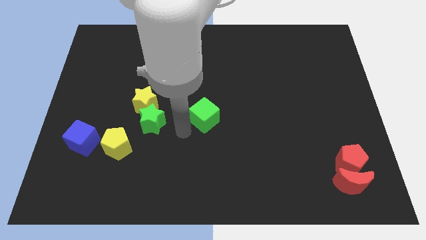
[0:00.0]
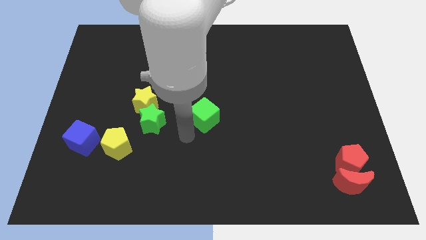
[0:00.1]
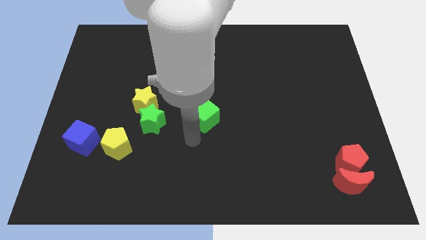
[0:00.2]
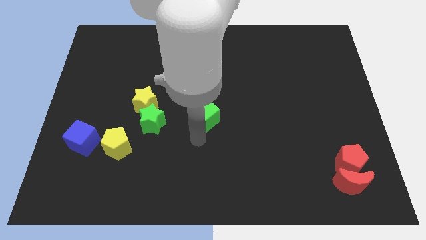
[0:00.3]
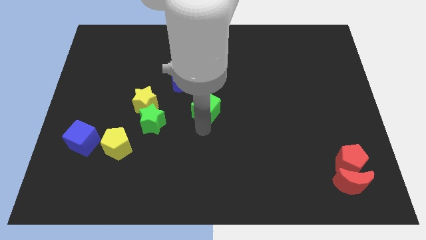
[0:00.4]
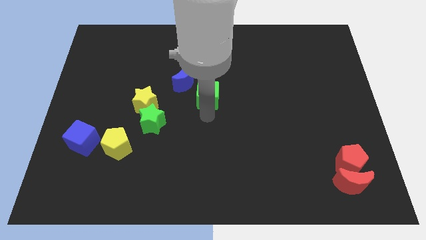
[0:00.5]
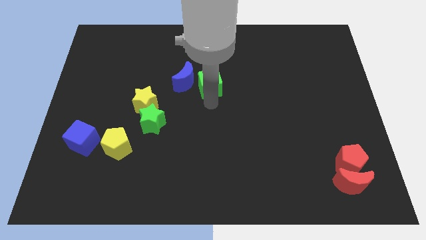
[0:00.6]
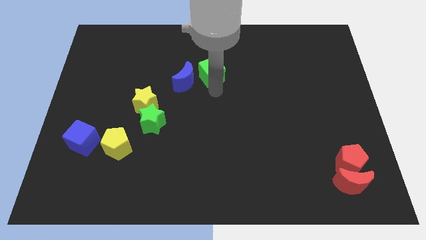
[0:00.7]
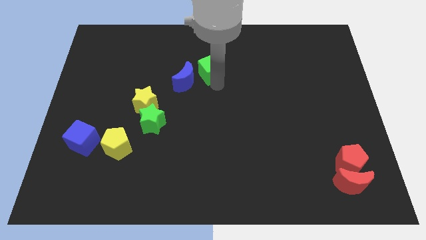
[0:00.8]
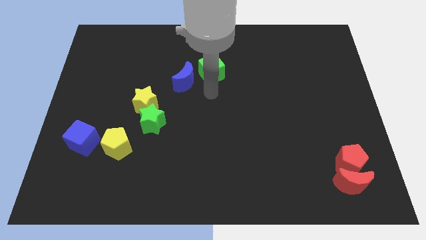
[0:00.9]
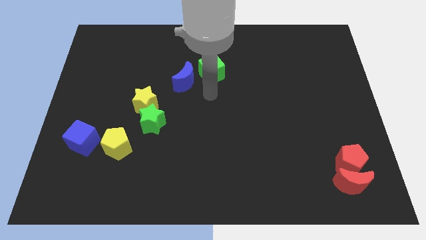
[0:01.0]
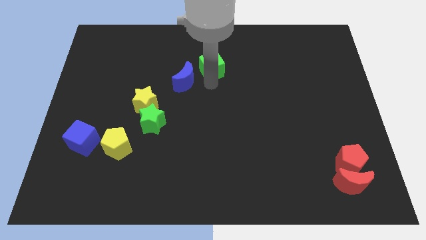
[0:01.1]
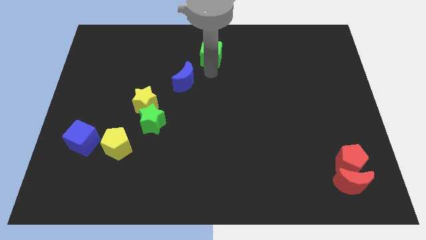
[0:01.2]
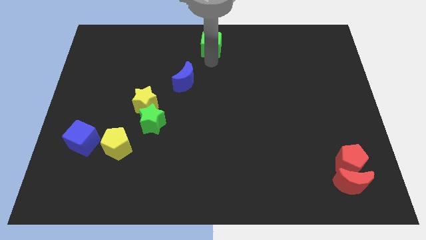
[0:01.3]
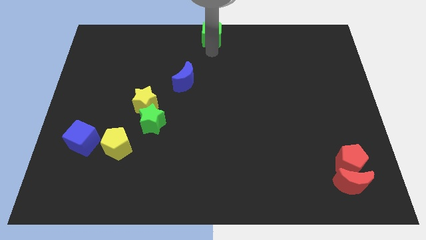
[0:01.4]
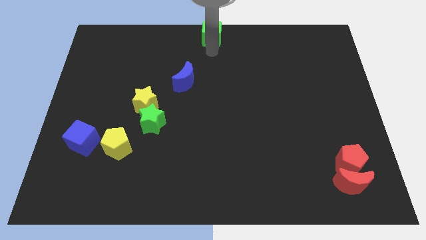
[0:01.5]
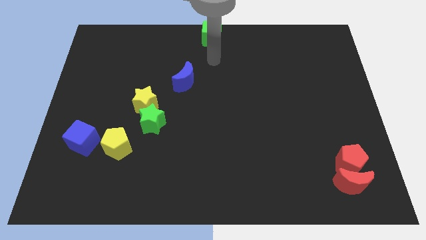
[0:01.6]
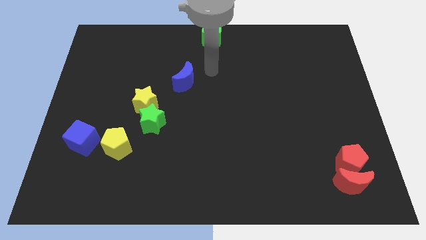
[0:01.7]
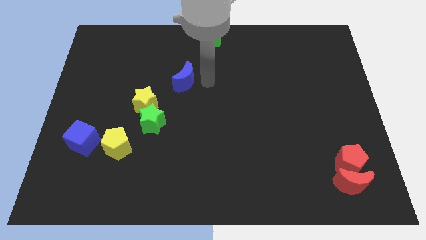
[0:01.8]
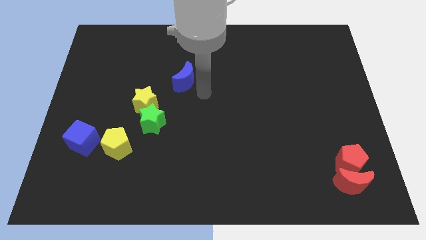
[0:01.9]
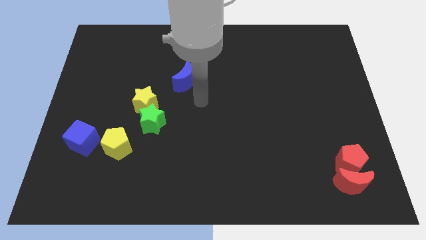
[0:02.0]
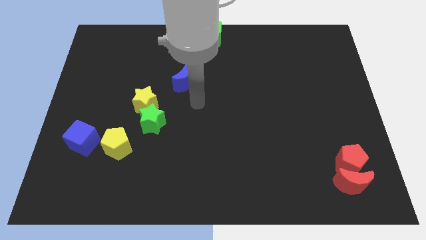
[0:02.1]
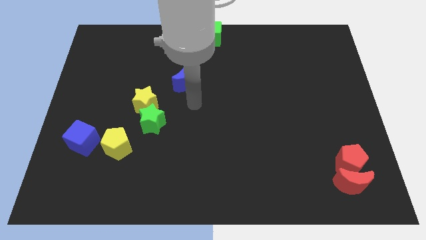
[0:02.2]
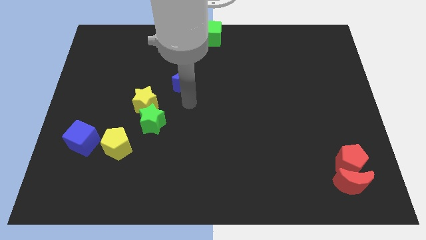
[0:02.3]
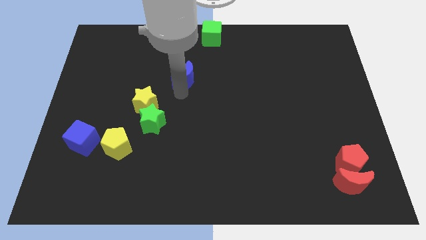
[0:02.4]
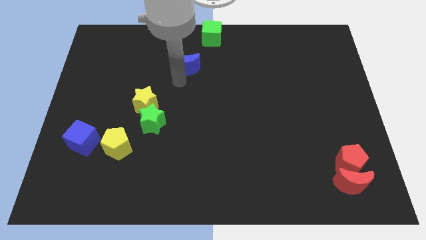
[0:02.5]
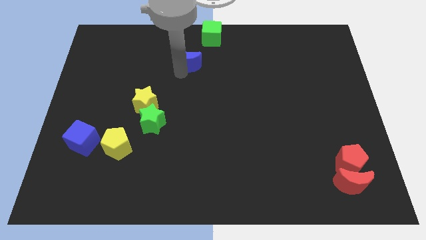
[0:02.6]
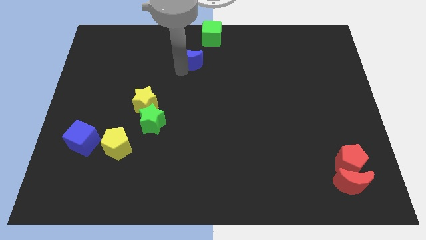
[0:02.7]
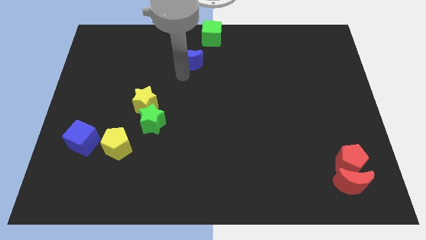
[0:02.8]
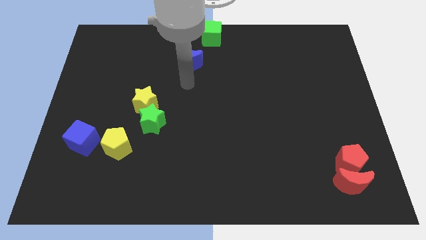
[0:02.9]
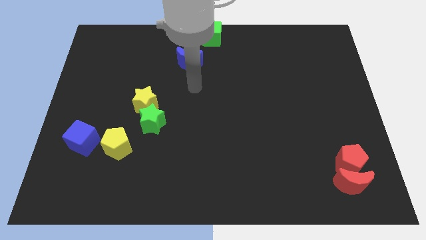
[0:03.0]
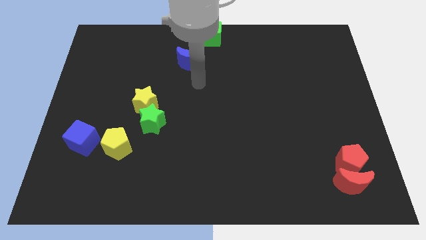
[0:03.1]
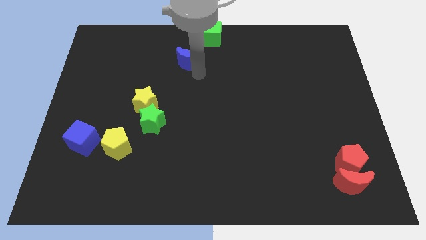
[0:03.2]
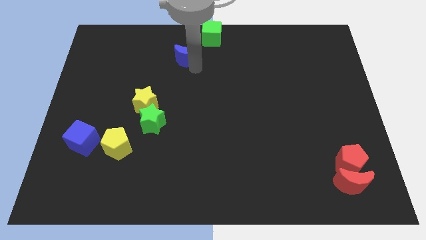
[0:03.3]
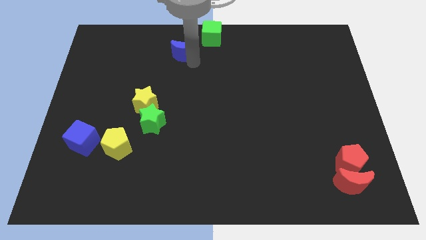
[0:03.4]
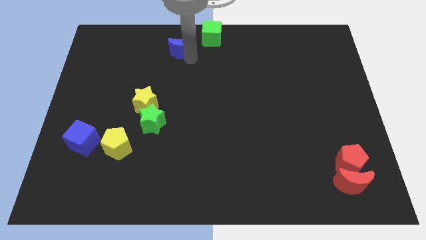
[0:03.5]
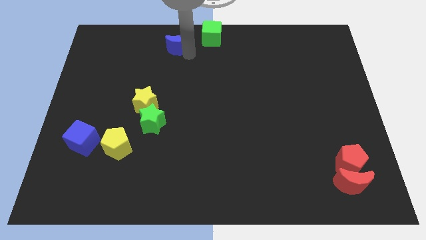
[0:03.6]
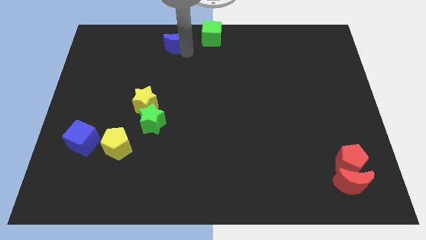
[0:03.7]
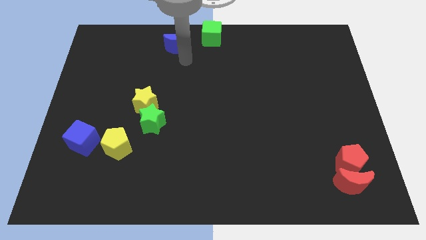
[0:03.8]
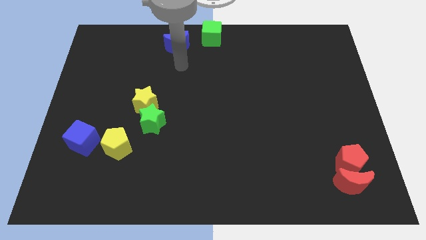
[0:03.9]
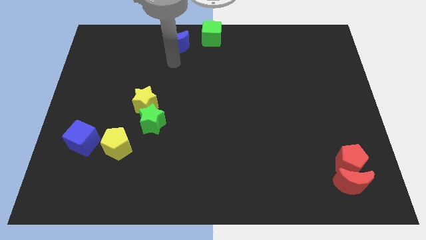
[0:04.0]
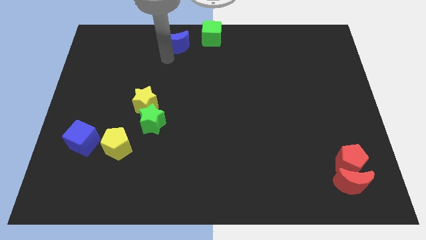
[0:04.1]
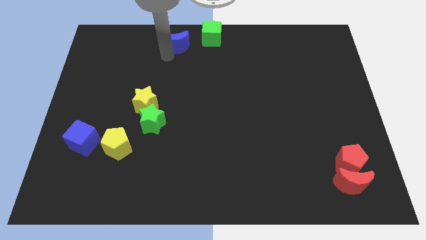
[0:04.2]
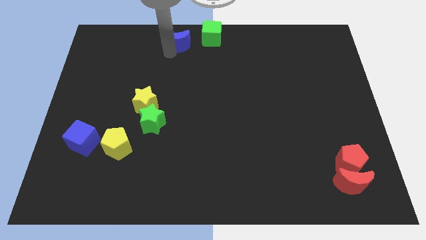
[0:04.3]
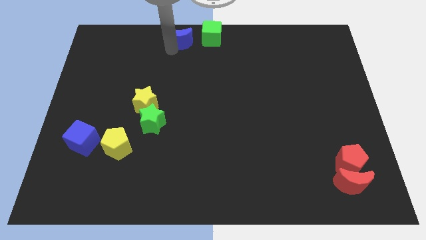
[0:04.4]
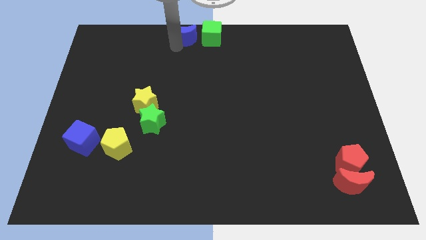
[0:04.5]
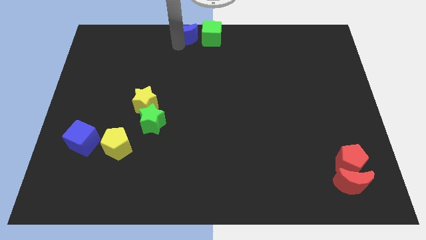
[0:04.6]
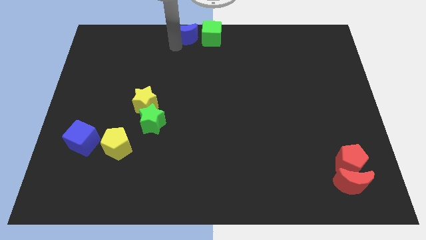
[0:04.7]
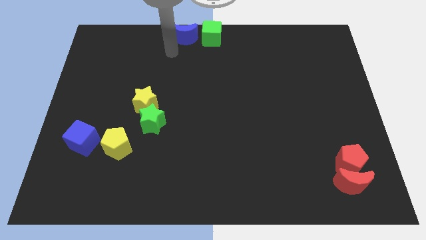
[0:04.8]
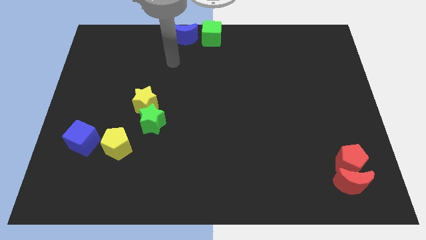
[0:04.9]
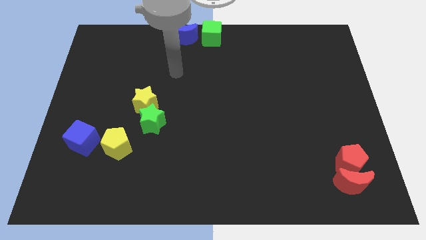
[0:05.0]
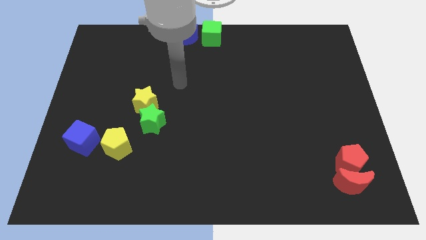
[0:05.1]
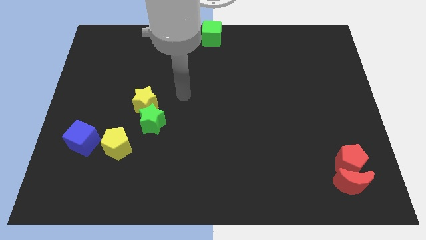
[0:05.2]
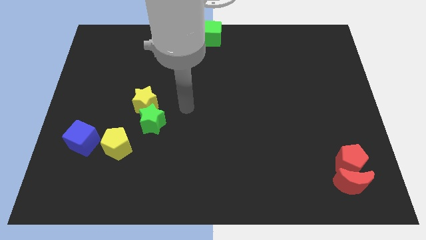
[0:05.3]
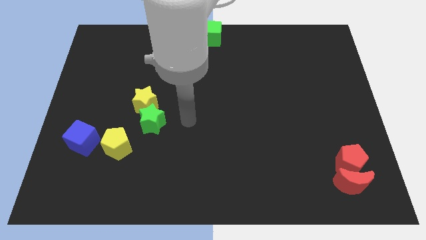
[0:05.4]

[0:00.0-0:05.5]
push the green cube and blue crescent to the top center of the board

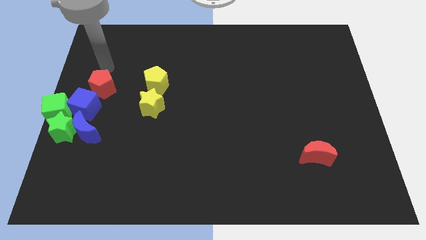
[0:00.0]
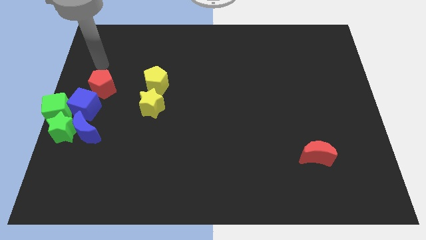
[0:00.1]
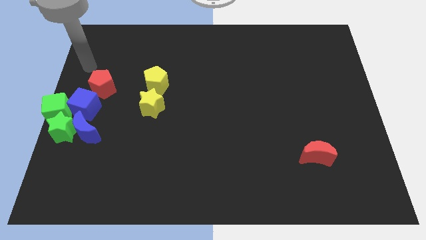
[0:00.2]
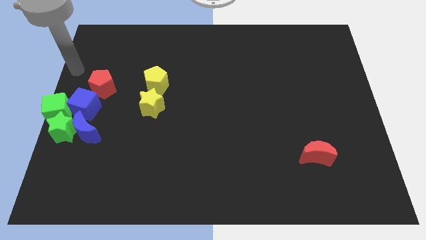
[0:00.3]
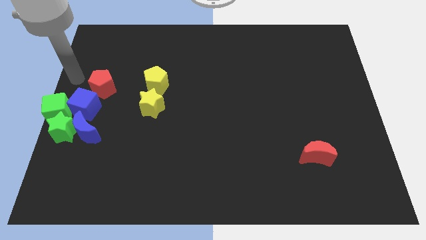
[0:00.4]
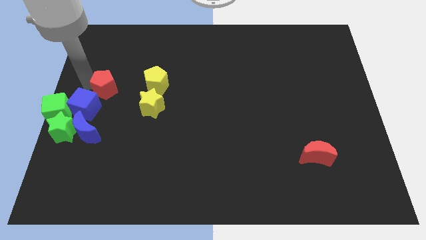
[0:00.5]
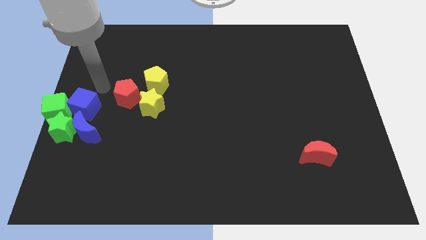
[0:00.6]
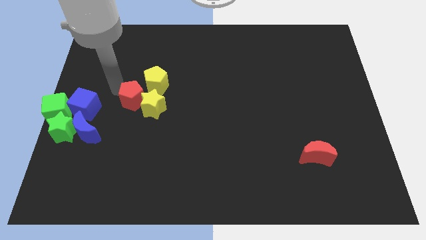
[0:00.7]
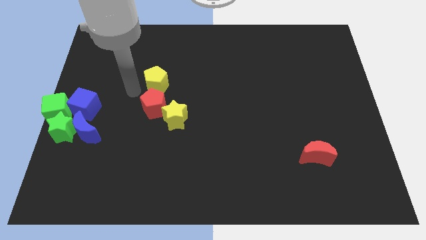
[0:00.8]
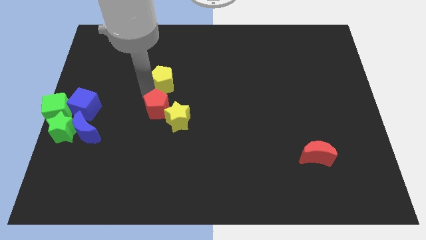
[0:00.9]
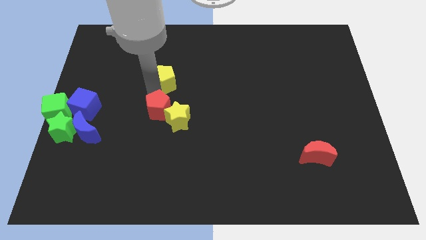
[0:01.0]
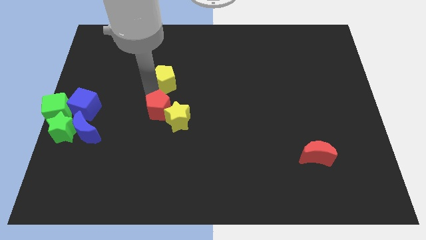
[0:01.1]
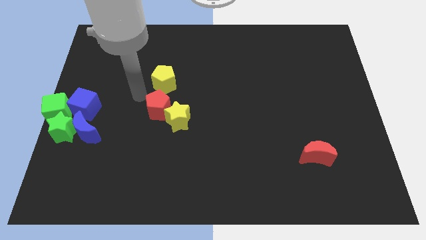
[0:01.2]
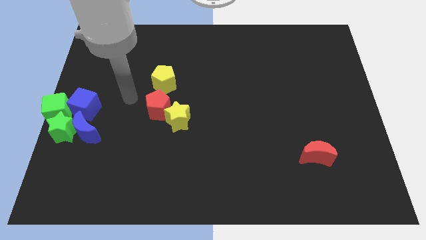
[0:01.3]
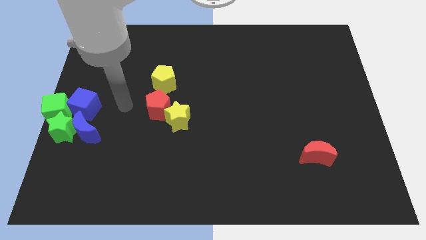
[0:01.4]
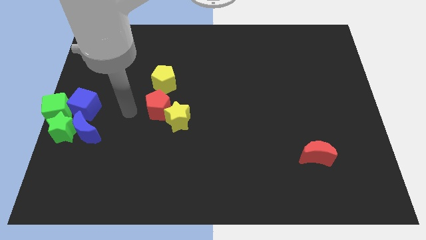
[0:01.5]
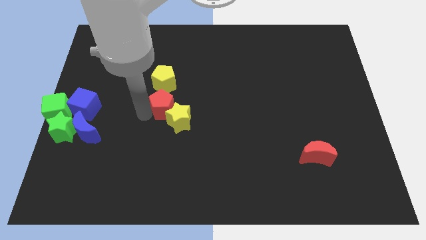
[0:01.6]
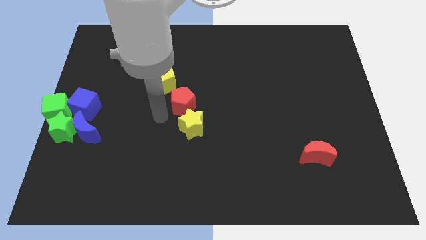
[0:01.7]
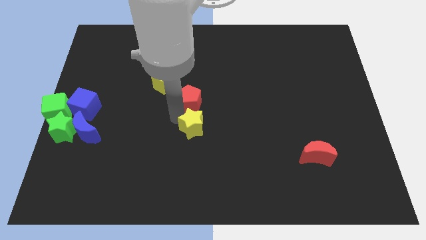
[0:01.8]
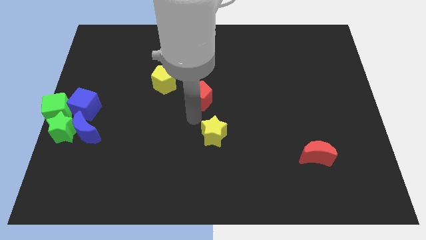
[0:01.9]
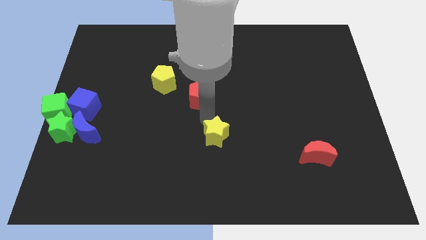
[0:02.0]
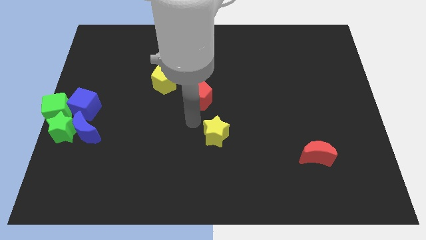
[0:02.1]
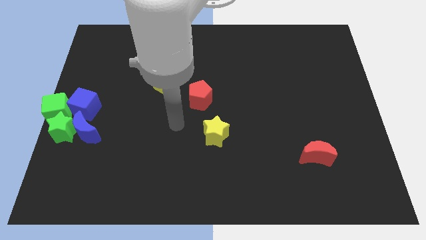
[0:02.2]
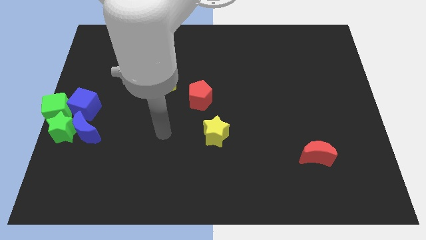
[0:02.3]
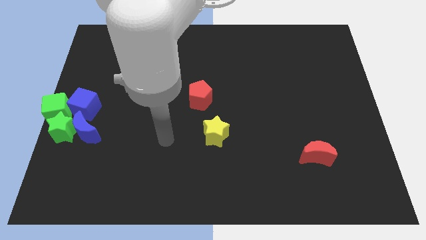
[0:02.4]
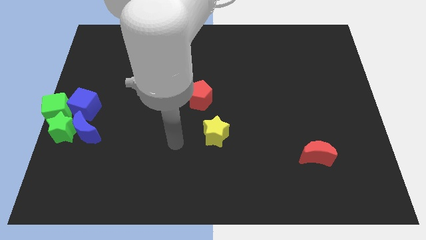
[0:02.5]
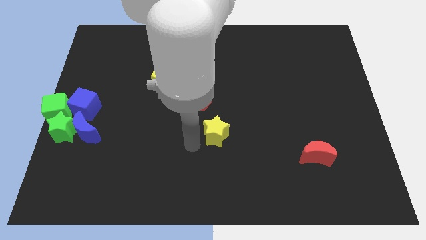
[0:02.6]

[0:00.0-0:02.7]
push the red moon towards the center of the board

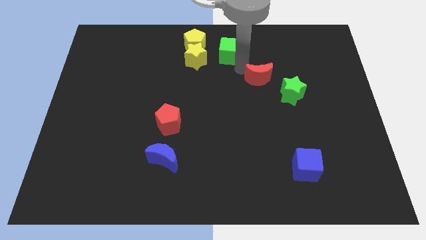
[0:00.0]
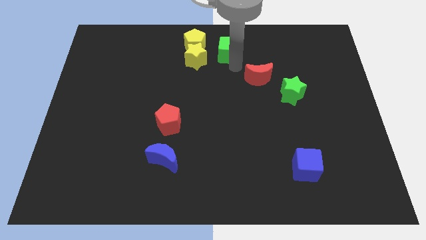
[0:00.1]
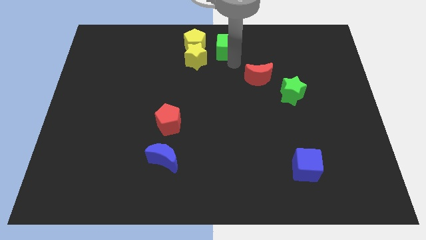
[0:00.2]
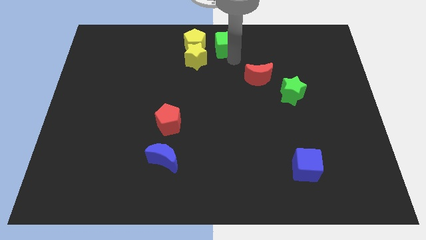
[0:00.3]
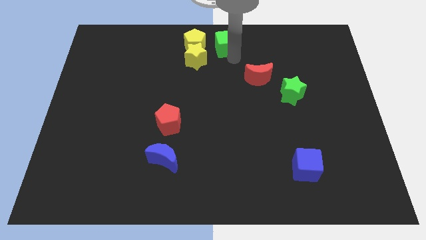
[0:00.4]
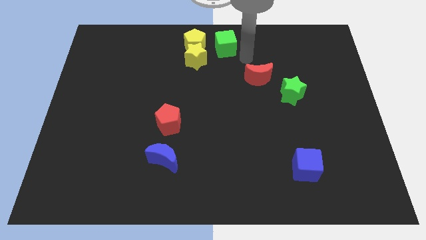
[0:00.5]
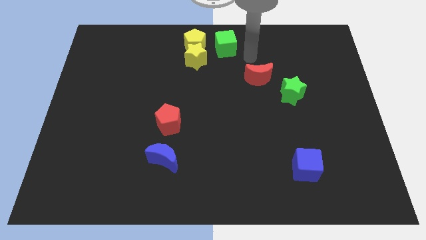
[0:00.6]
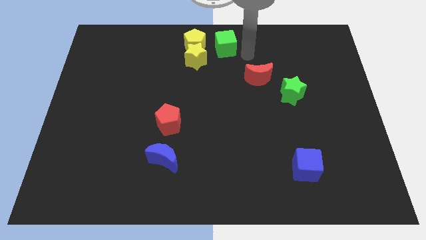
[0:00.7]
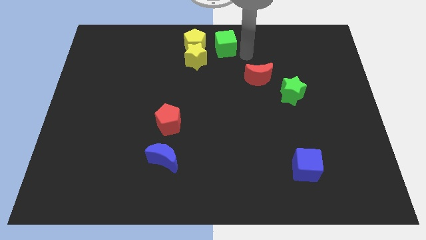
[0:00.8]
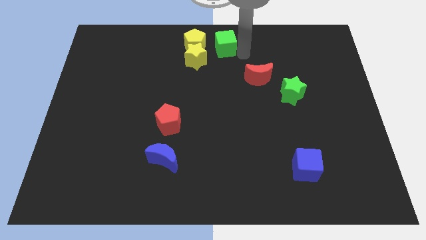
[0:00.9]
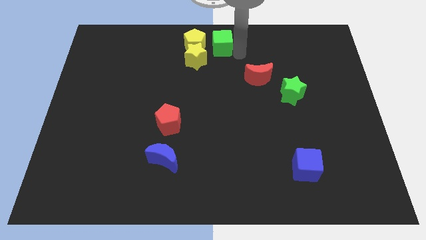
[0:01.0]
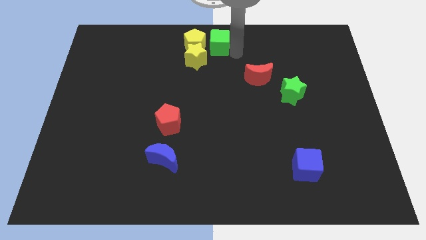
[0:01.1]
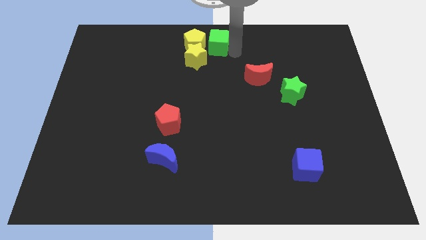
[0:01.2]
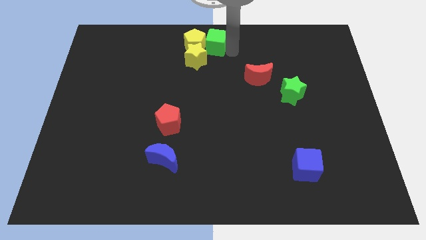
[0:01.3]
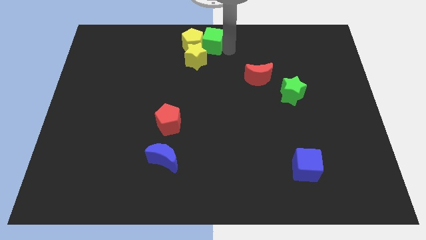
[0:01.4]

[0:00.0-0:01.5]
push the green cube into the yellow pentagon
